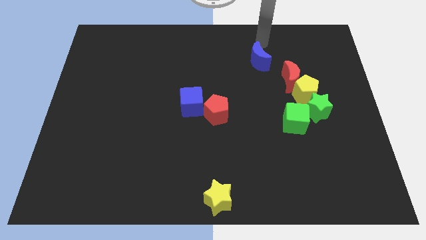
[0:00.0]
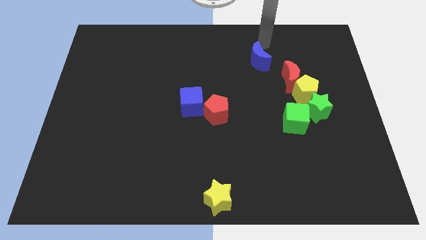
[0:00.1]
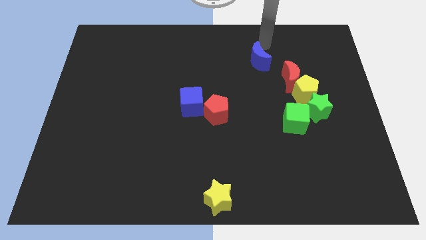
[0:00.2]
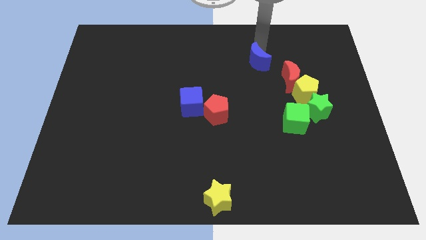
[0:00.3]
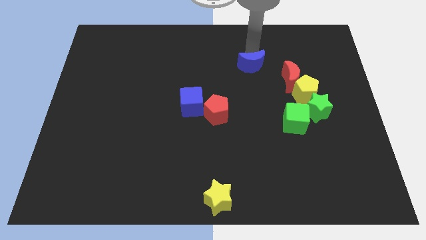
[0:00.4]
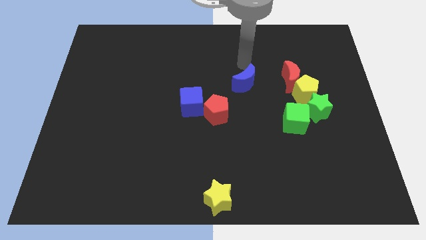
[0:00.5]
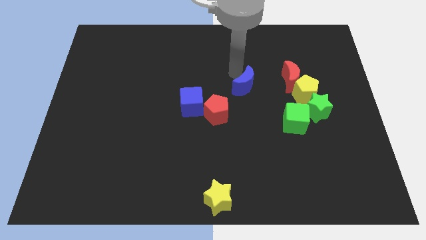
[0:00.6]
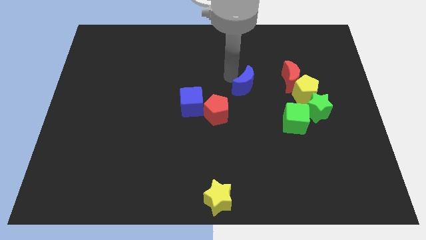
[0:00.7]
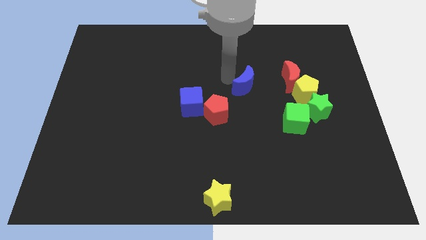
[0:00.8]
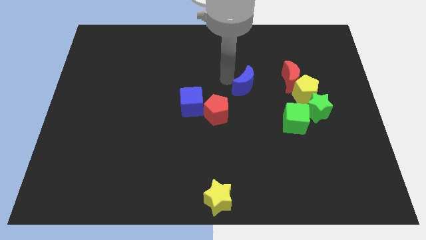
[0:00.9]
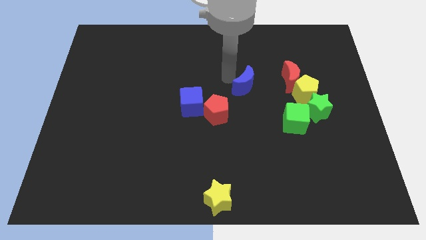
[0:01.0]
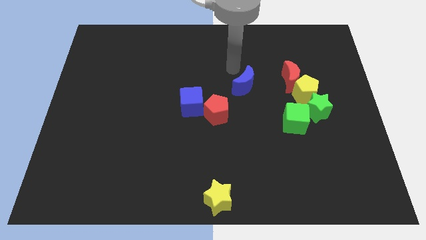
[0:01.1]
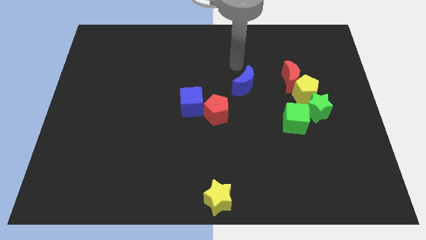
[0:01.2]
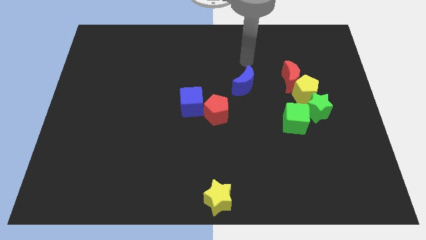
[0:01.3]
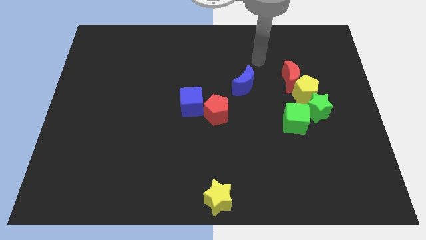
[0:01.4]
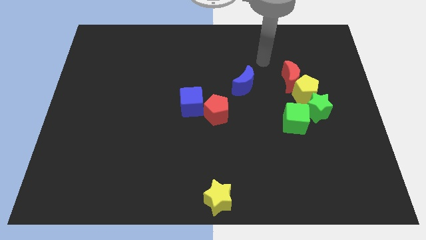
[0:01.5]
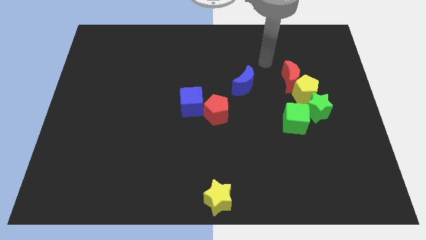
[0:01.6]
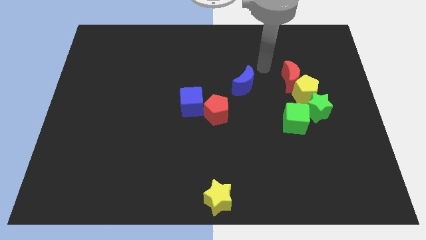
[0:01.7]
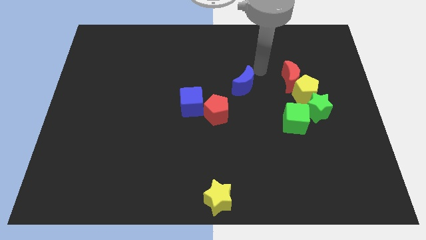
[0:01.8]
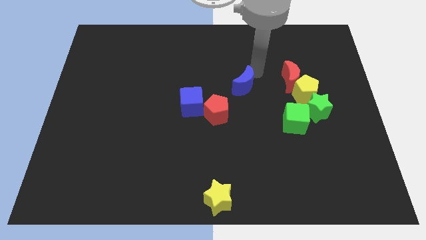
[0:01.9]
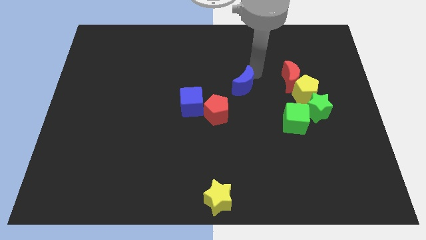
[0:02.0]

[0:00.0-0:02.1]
push the blue moon diagonal right of red pentagon

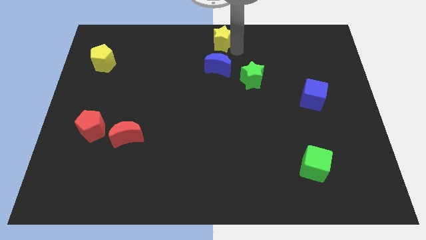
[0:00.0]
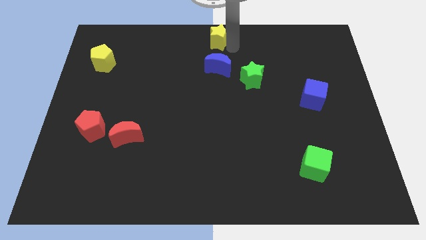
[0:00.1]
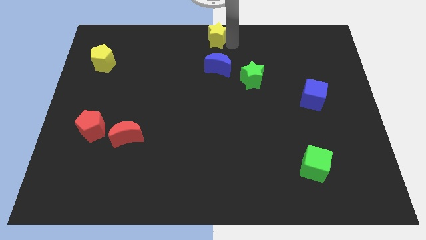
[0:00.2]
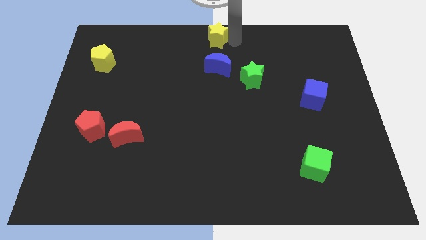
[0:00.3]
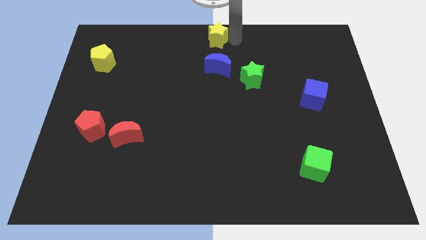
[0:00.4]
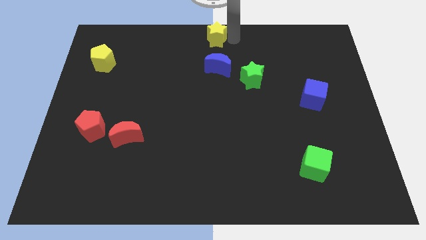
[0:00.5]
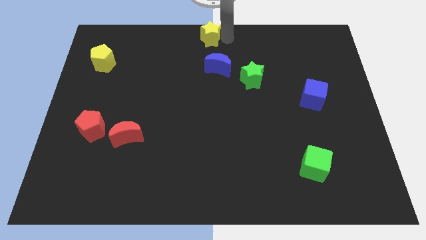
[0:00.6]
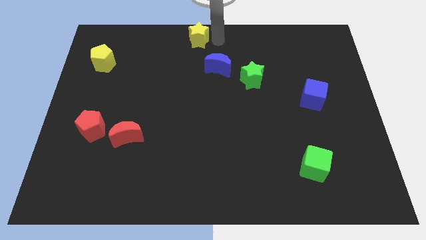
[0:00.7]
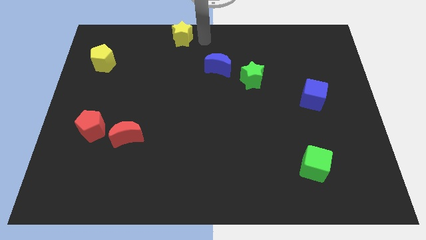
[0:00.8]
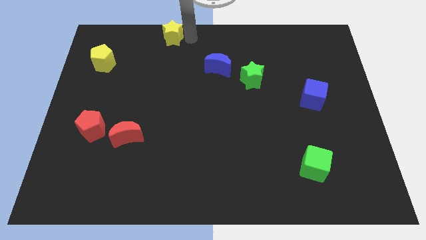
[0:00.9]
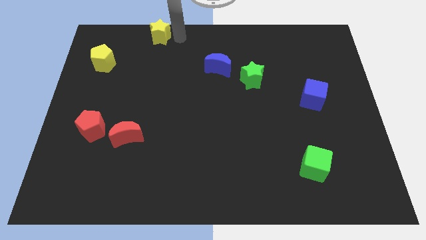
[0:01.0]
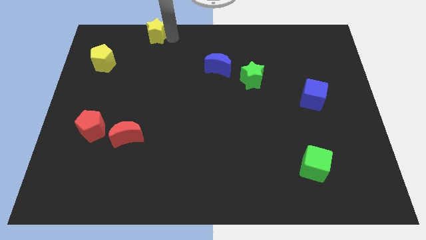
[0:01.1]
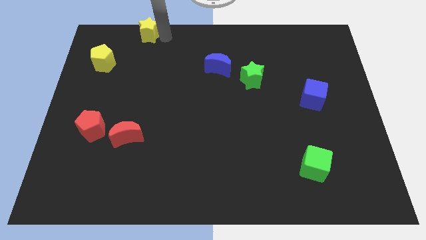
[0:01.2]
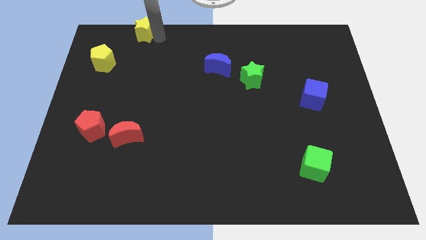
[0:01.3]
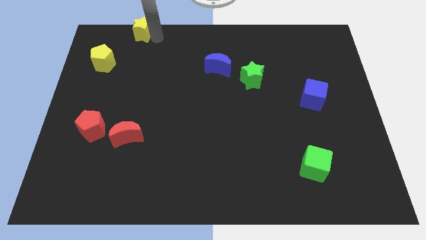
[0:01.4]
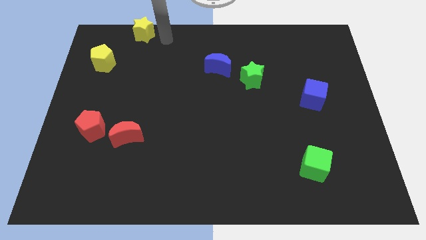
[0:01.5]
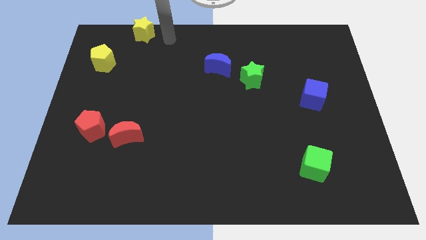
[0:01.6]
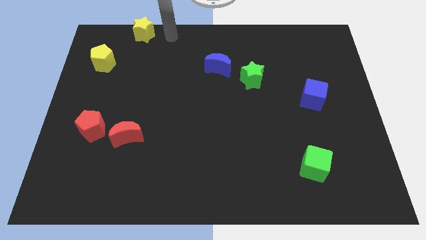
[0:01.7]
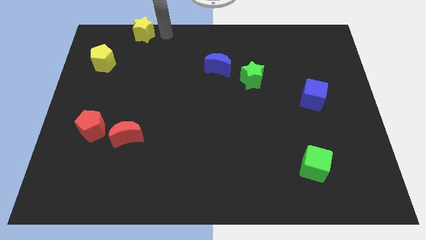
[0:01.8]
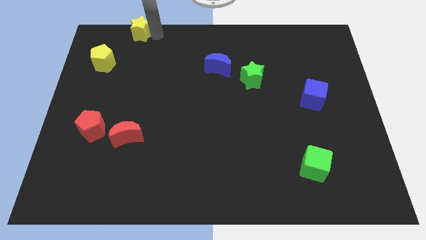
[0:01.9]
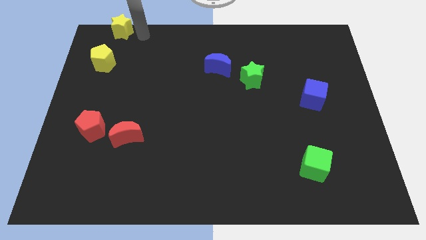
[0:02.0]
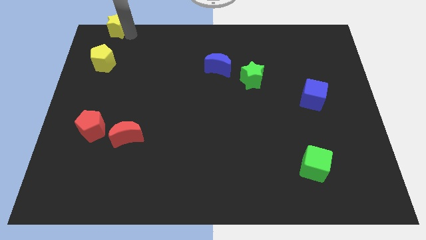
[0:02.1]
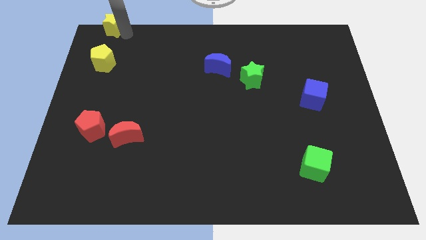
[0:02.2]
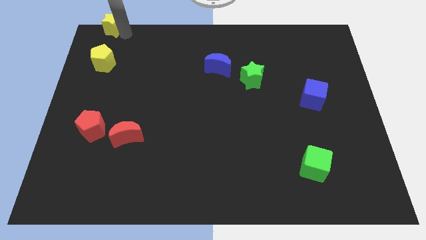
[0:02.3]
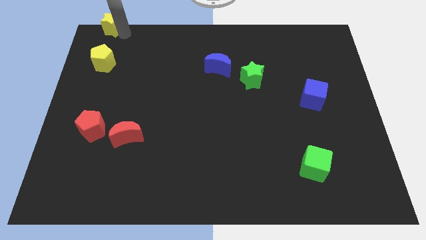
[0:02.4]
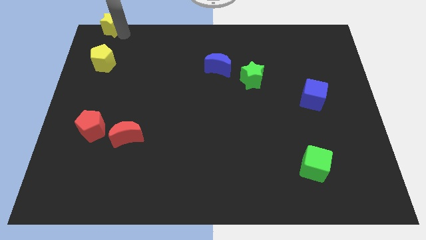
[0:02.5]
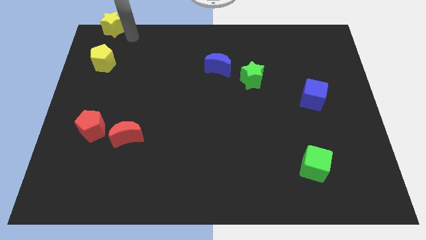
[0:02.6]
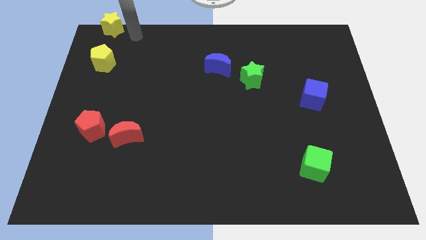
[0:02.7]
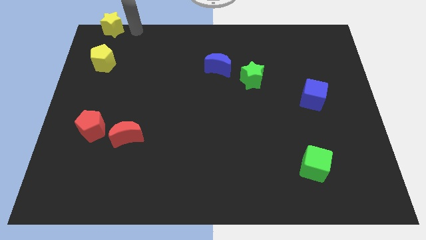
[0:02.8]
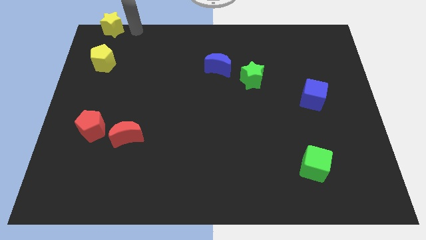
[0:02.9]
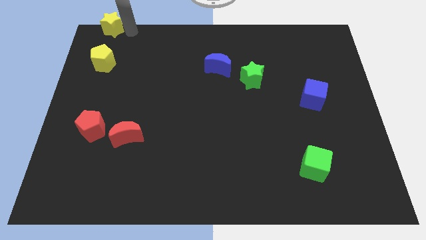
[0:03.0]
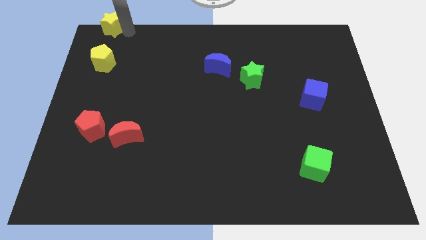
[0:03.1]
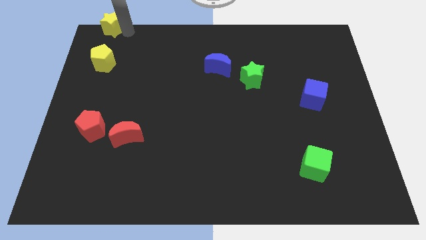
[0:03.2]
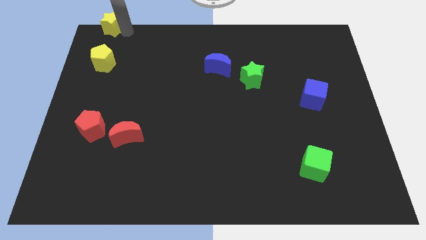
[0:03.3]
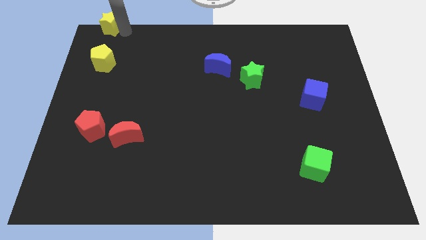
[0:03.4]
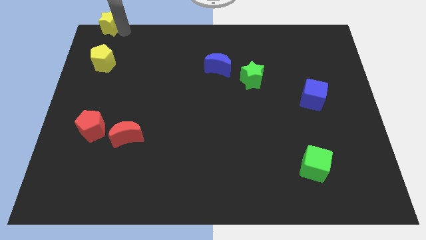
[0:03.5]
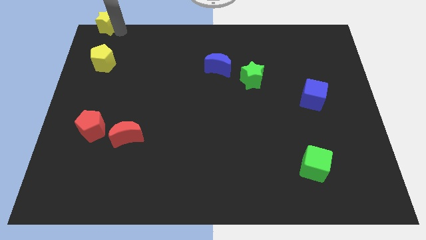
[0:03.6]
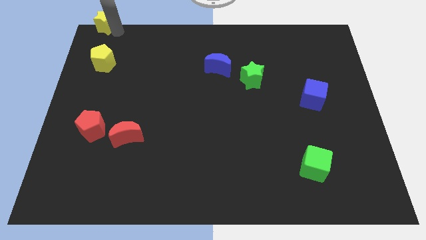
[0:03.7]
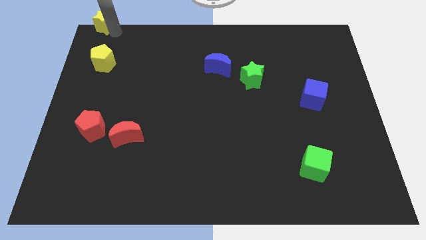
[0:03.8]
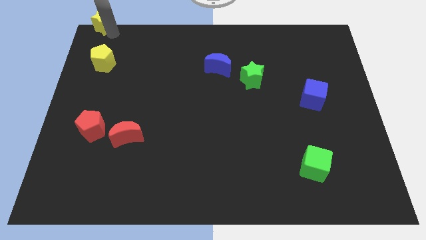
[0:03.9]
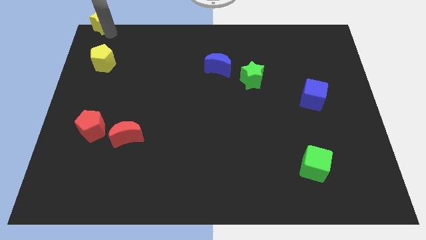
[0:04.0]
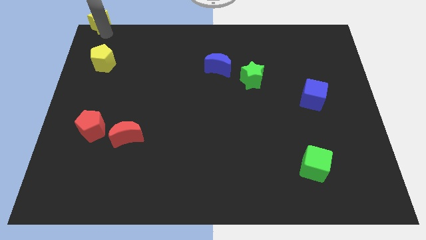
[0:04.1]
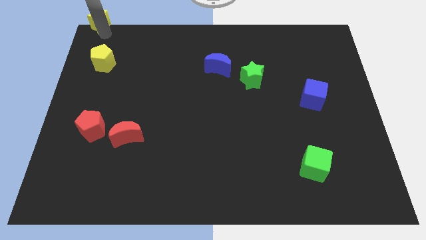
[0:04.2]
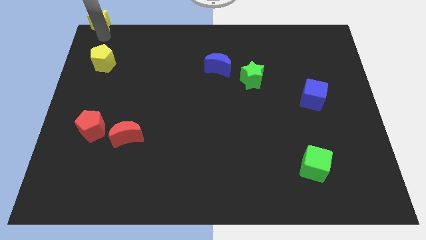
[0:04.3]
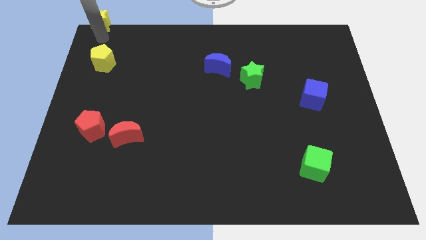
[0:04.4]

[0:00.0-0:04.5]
slide the yellow star to the top left corner of the board

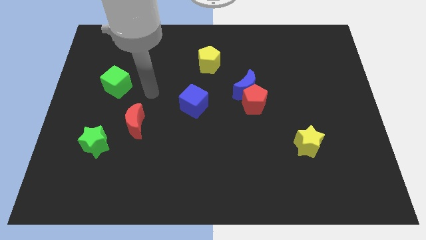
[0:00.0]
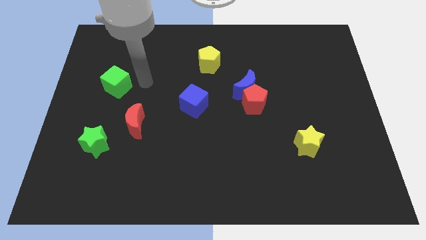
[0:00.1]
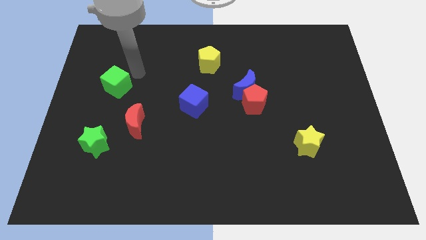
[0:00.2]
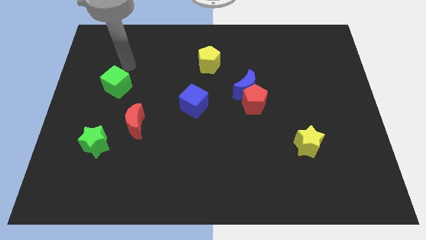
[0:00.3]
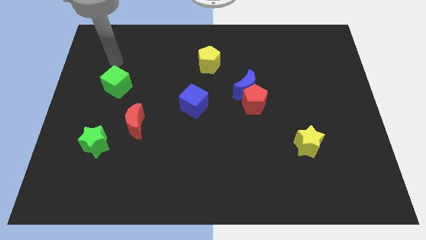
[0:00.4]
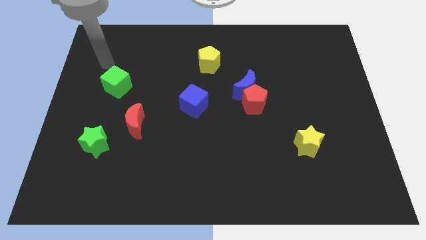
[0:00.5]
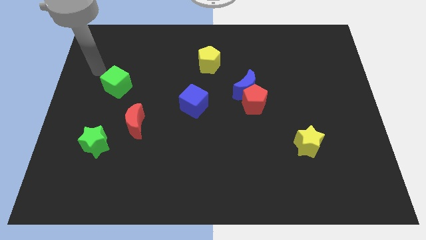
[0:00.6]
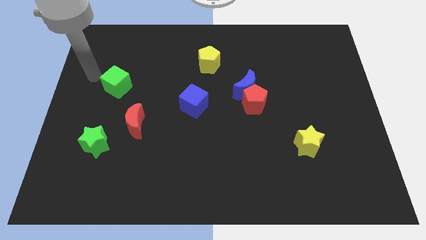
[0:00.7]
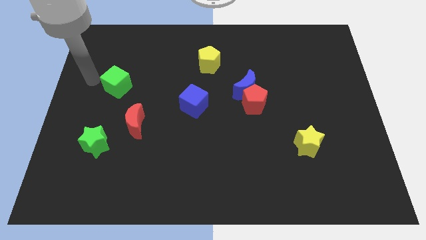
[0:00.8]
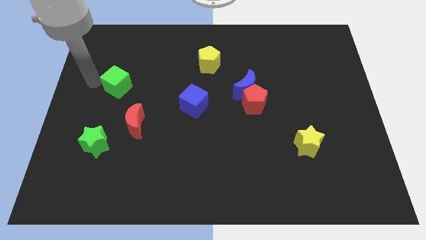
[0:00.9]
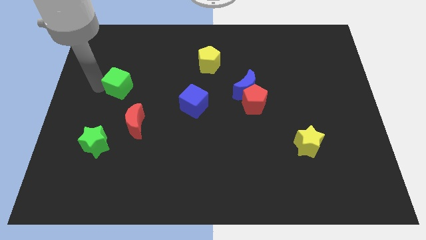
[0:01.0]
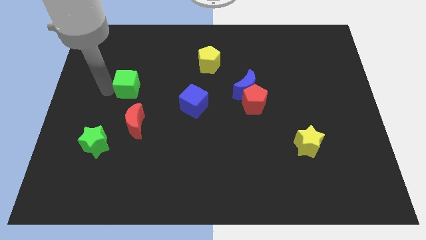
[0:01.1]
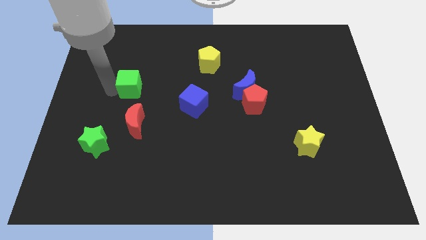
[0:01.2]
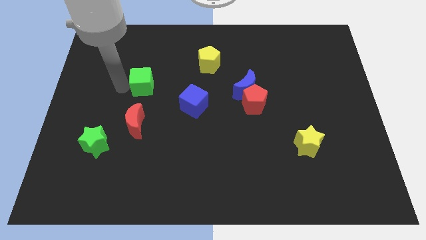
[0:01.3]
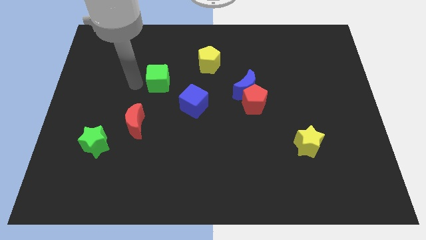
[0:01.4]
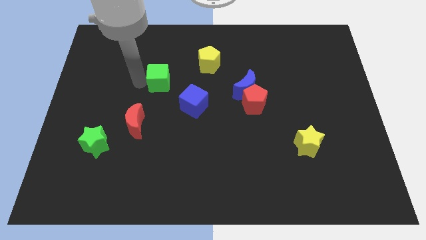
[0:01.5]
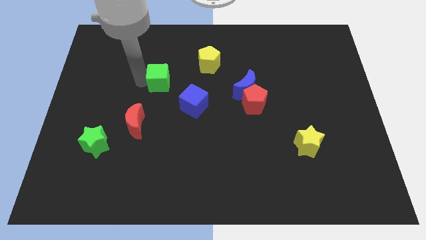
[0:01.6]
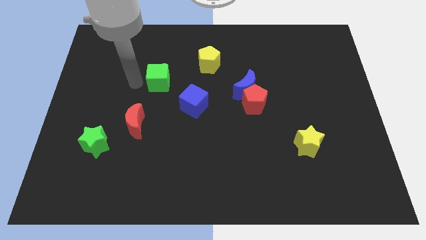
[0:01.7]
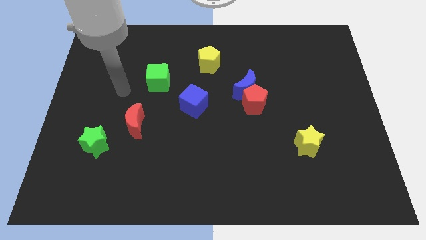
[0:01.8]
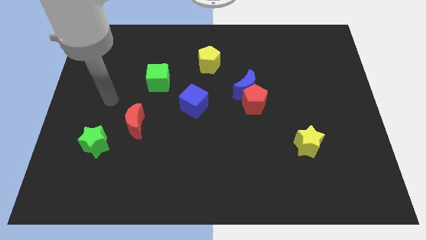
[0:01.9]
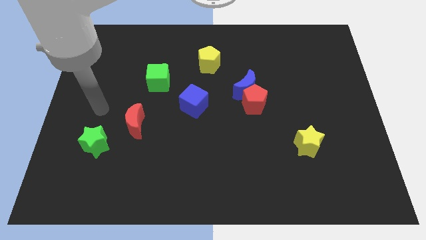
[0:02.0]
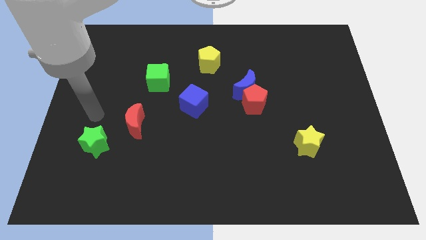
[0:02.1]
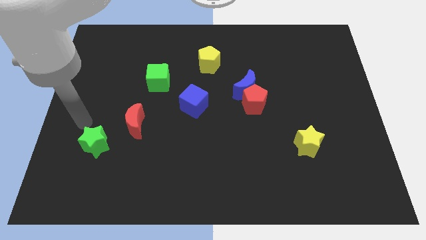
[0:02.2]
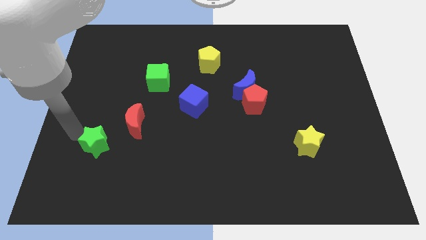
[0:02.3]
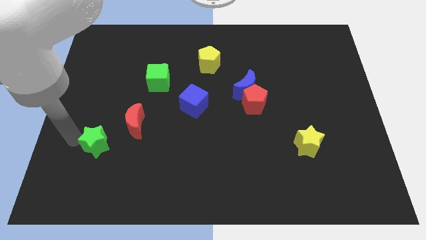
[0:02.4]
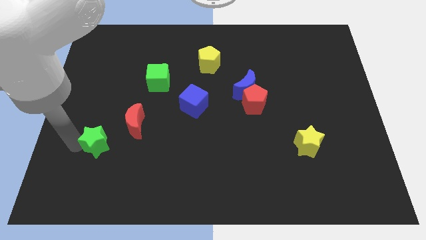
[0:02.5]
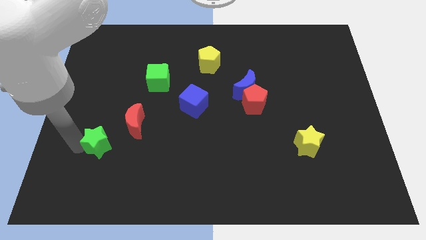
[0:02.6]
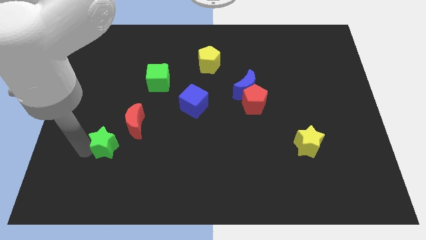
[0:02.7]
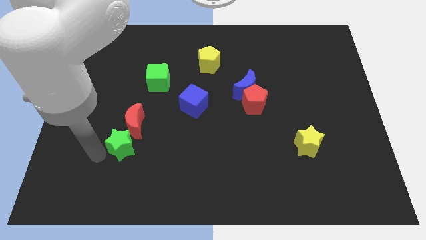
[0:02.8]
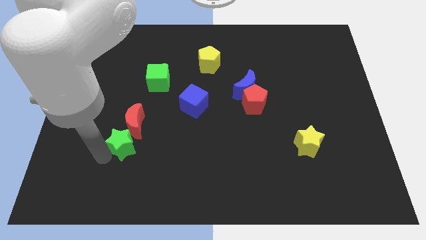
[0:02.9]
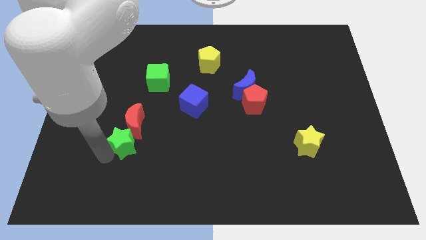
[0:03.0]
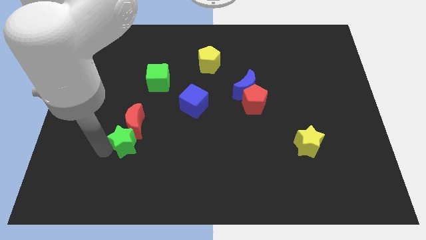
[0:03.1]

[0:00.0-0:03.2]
move the green blocks to the right of the board
